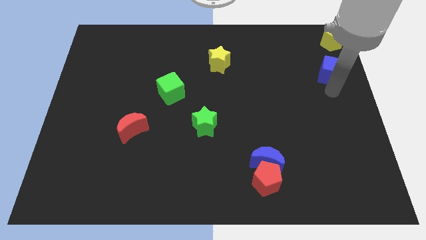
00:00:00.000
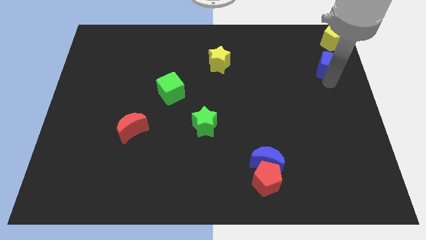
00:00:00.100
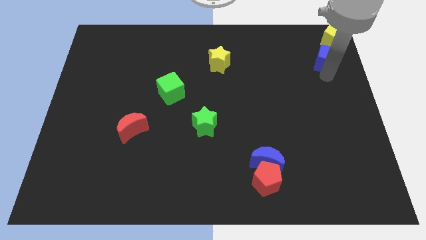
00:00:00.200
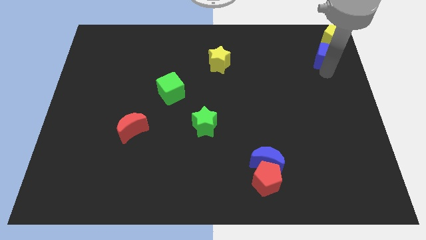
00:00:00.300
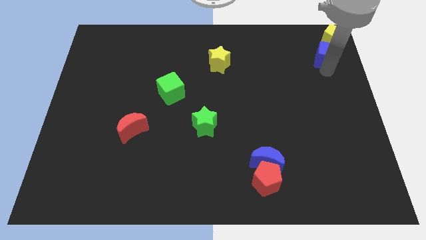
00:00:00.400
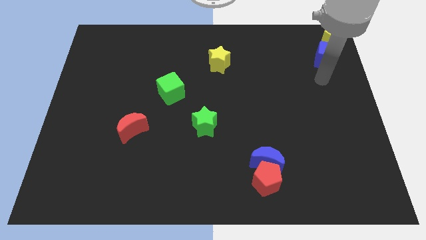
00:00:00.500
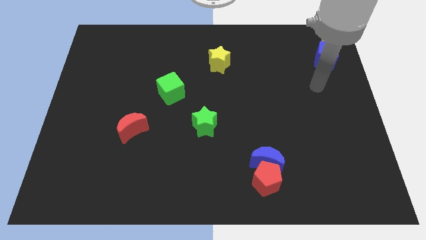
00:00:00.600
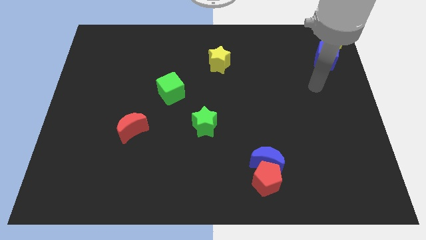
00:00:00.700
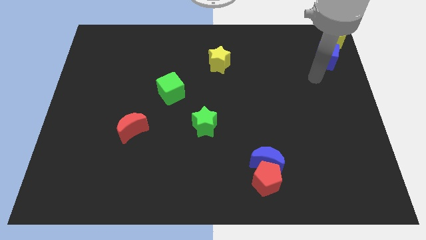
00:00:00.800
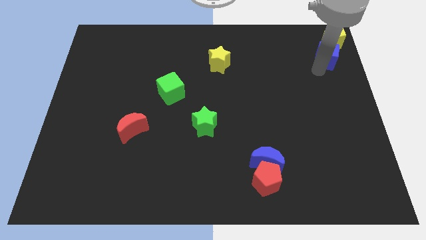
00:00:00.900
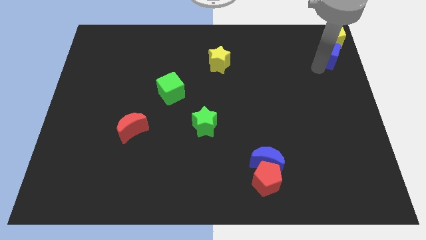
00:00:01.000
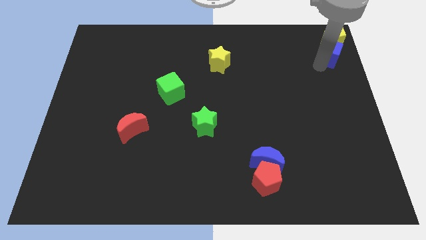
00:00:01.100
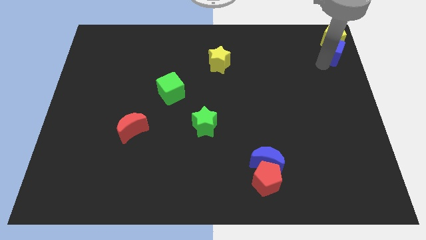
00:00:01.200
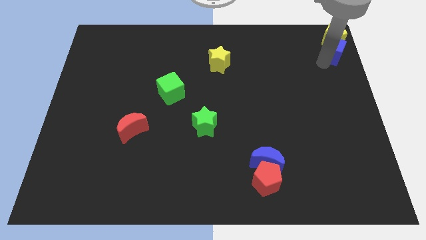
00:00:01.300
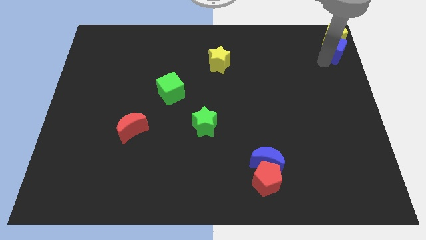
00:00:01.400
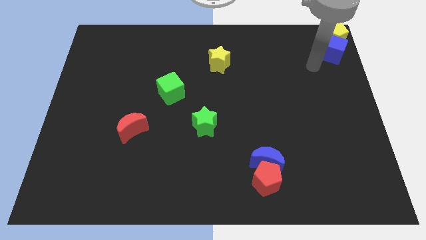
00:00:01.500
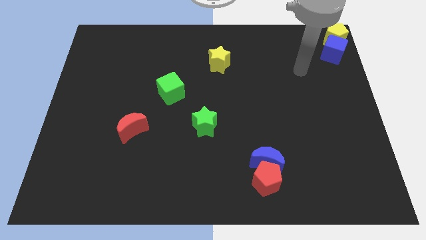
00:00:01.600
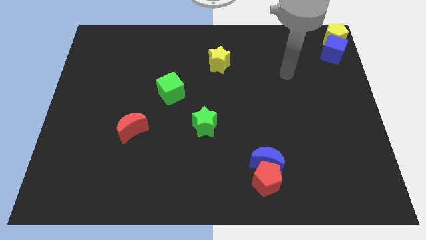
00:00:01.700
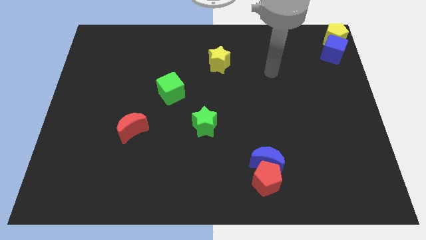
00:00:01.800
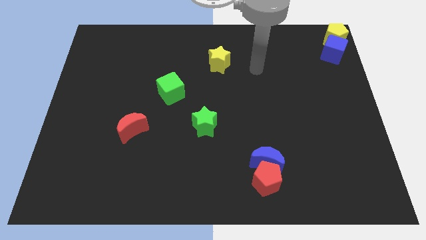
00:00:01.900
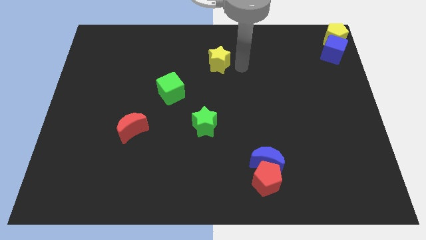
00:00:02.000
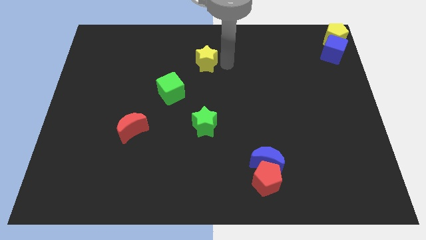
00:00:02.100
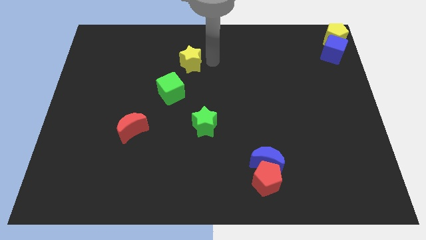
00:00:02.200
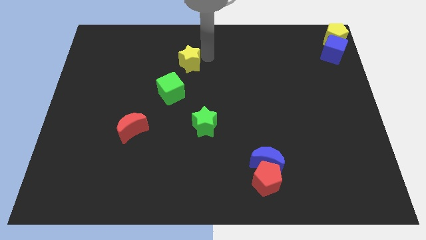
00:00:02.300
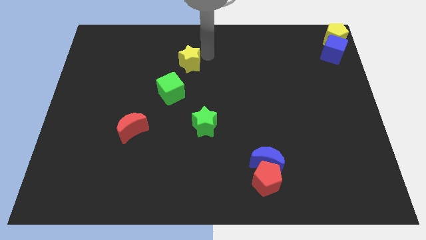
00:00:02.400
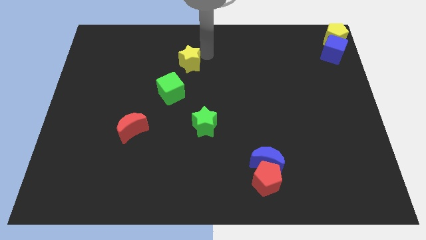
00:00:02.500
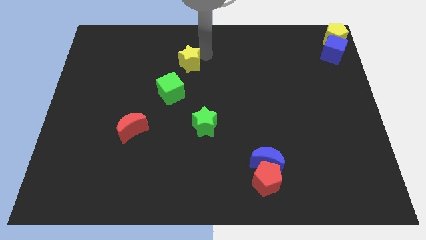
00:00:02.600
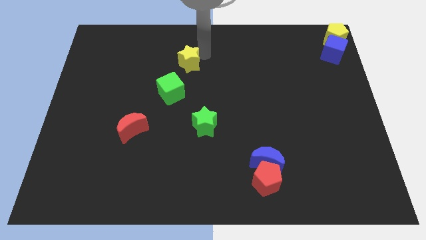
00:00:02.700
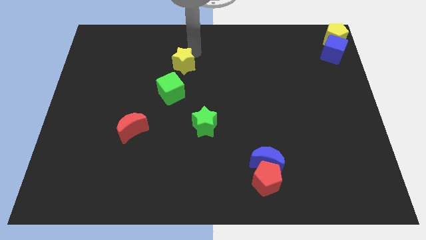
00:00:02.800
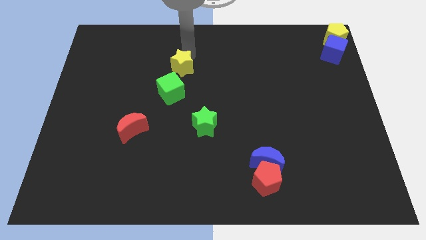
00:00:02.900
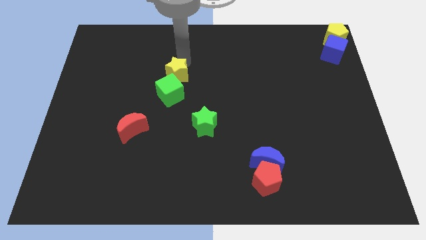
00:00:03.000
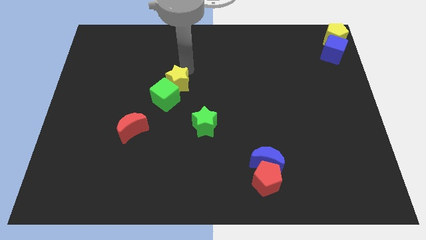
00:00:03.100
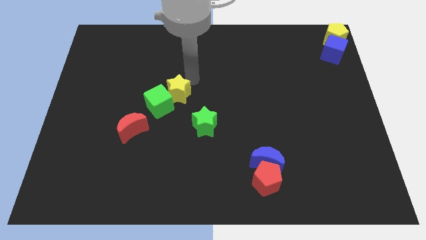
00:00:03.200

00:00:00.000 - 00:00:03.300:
push the yellow star into the green cube

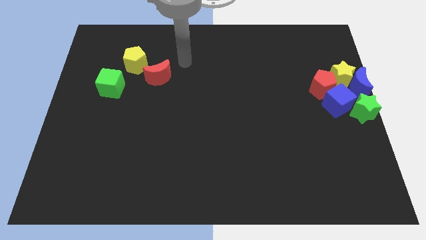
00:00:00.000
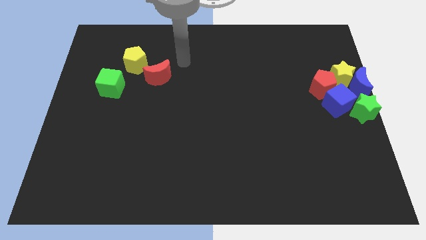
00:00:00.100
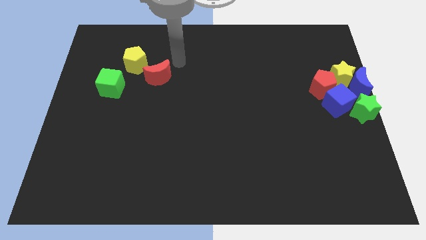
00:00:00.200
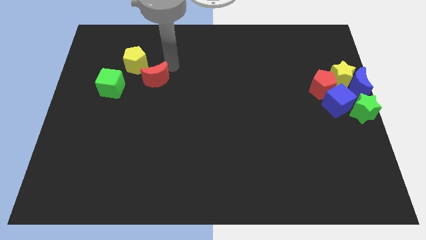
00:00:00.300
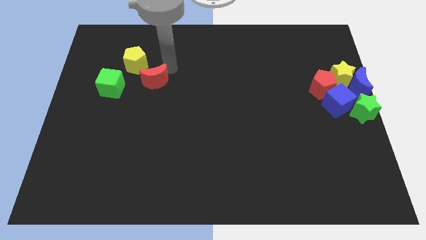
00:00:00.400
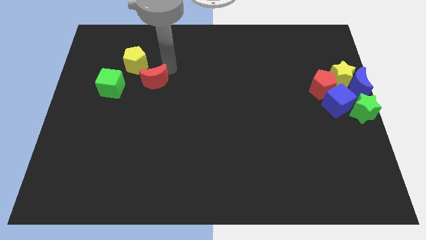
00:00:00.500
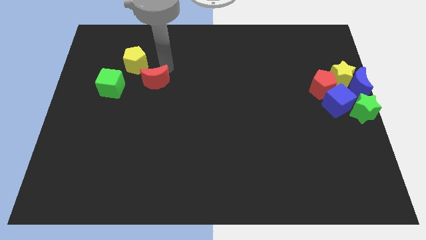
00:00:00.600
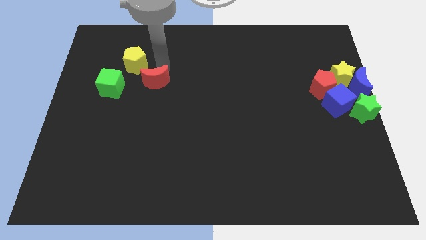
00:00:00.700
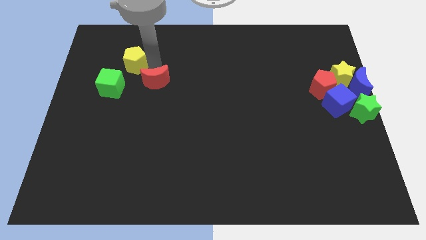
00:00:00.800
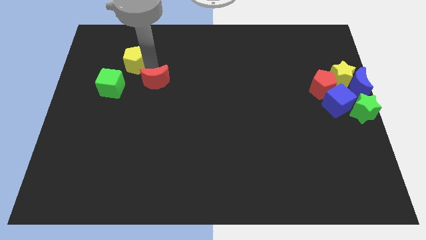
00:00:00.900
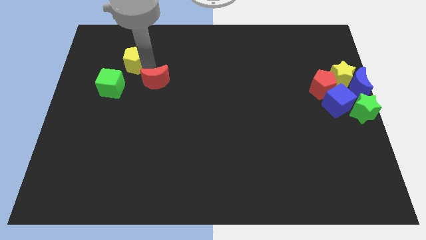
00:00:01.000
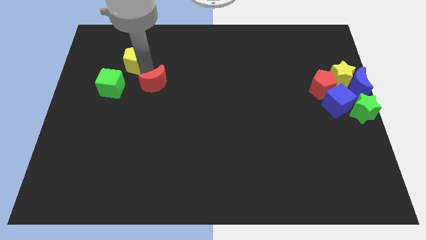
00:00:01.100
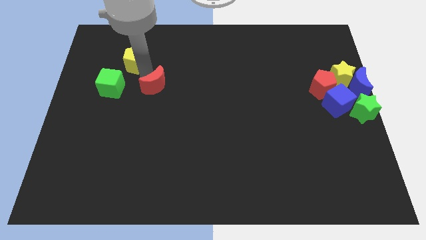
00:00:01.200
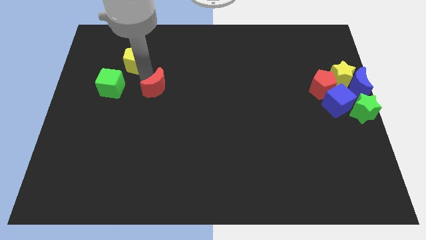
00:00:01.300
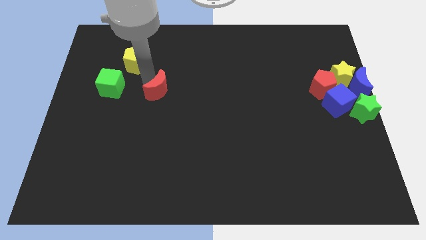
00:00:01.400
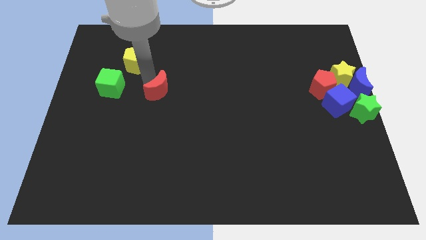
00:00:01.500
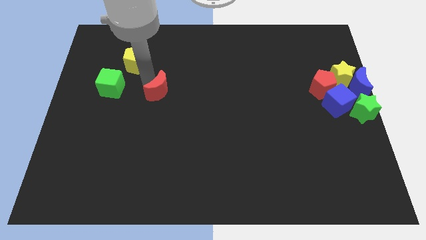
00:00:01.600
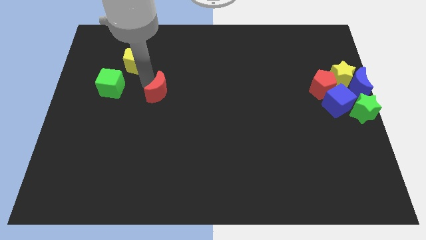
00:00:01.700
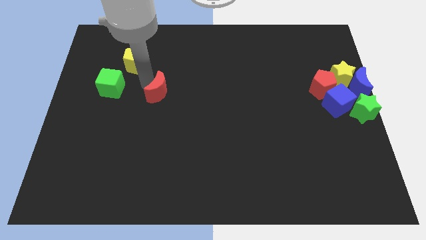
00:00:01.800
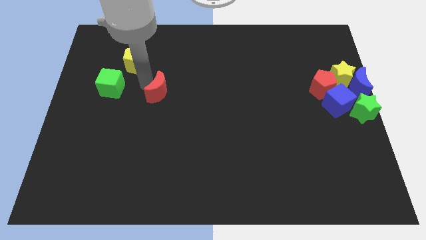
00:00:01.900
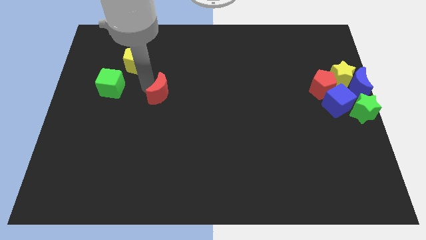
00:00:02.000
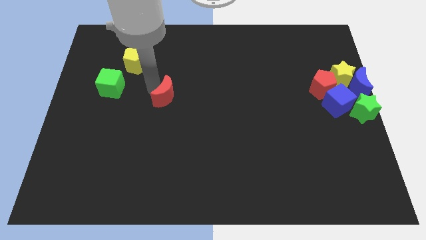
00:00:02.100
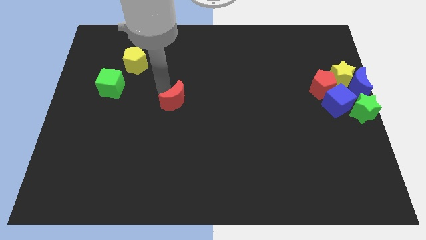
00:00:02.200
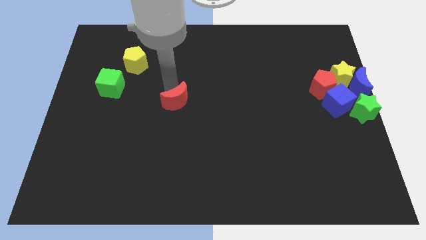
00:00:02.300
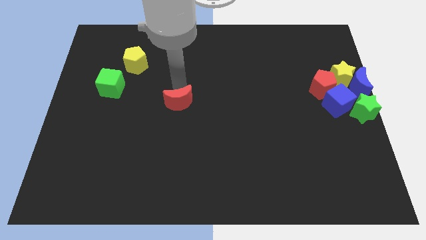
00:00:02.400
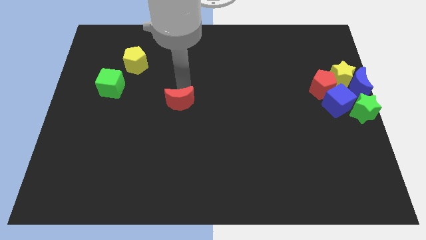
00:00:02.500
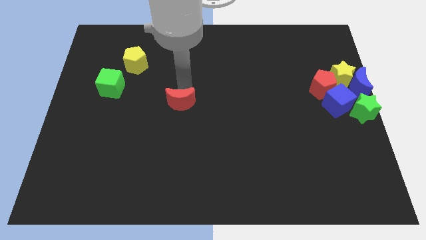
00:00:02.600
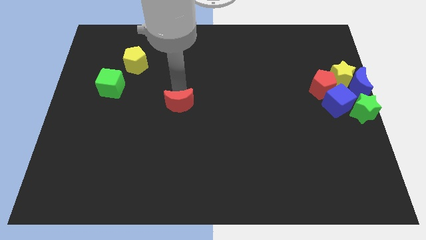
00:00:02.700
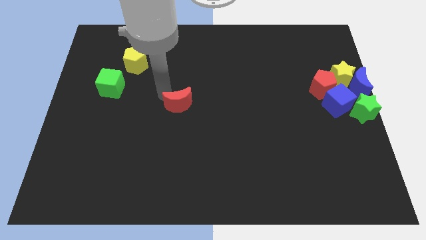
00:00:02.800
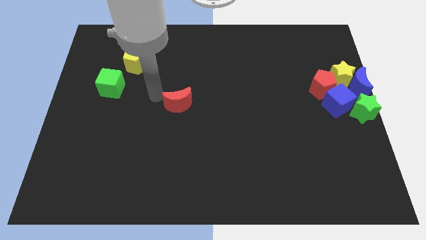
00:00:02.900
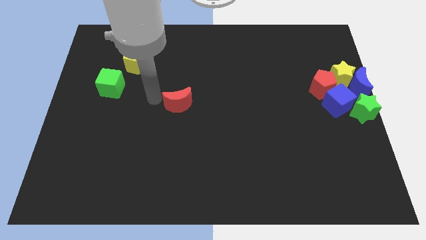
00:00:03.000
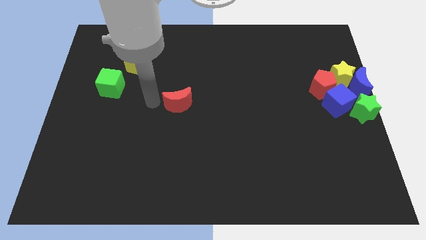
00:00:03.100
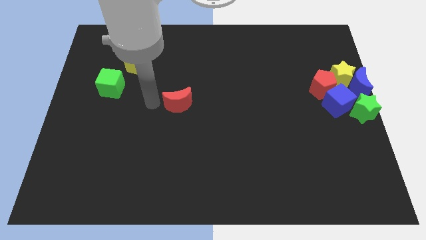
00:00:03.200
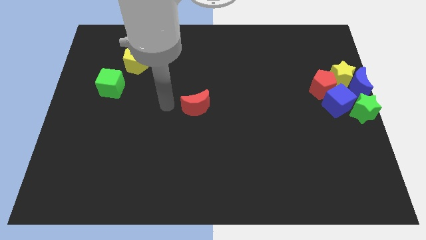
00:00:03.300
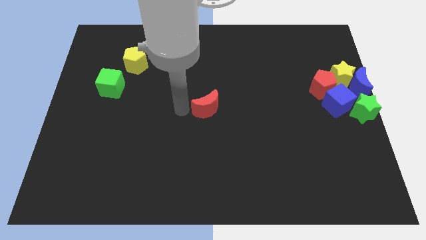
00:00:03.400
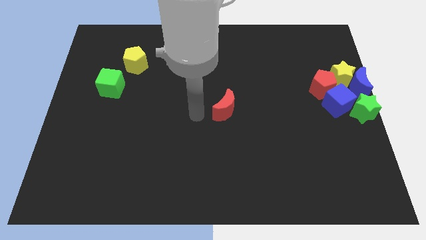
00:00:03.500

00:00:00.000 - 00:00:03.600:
slide the red pentagon to the center of the board

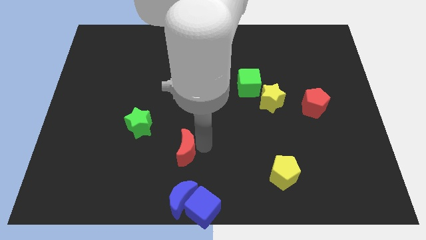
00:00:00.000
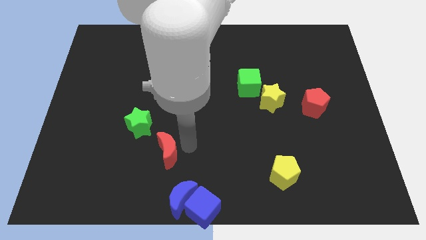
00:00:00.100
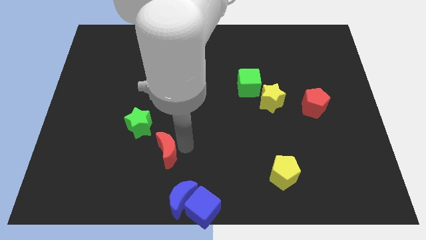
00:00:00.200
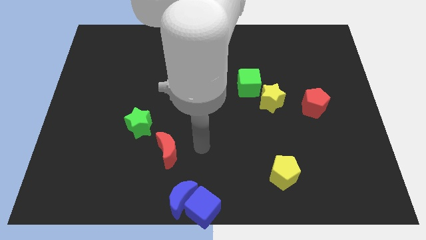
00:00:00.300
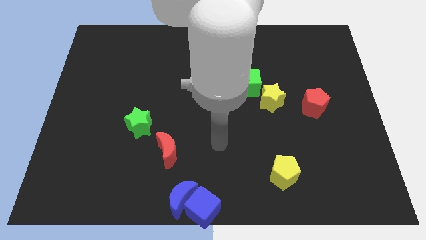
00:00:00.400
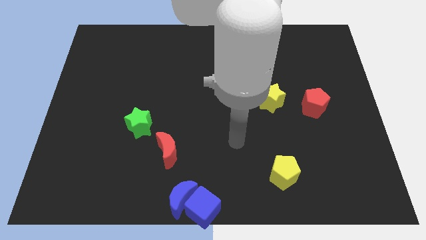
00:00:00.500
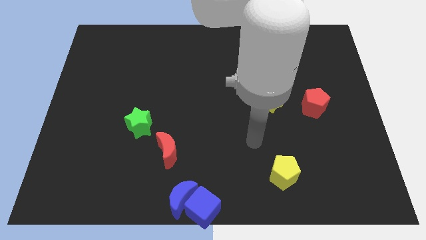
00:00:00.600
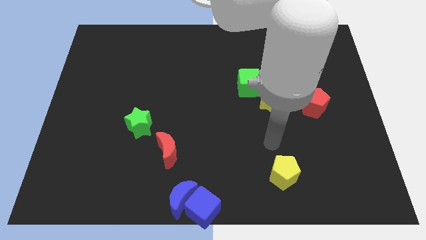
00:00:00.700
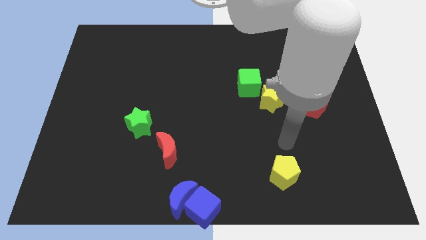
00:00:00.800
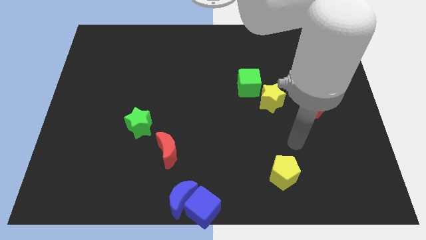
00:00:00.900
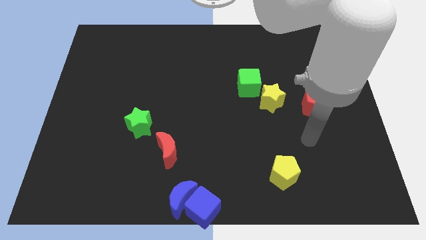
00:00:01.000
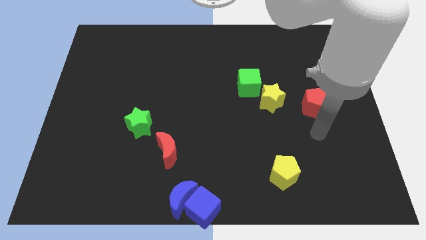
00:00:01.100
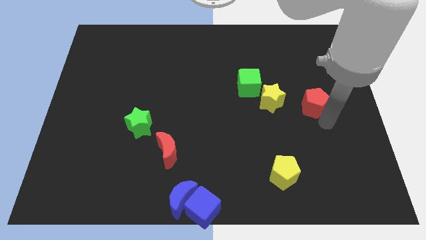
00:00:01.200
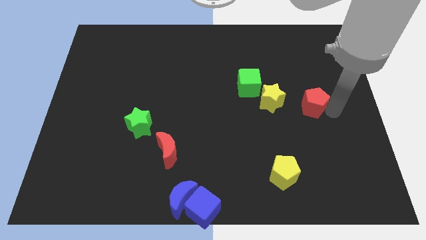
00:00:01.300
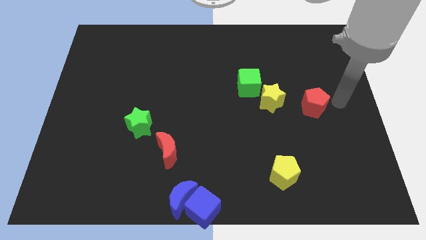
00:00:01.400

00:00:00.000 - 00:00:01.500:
place the red crescent towards the right side of the green star

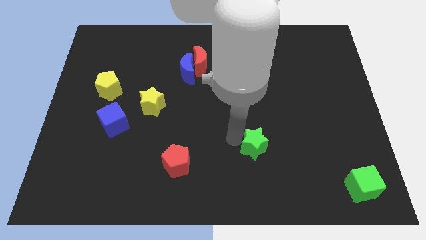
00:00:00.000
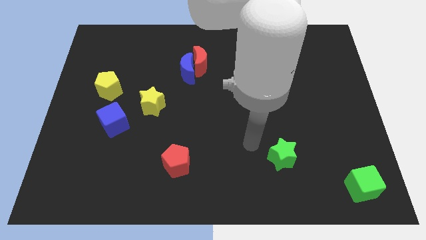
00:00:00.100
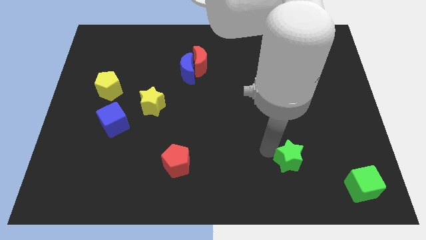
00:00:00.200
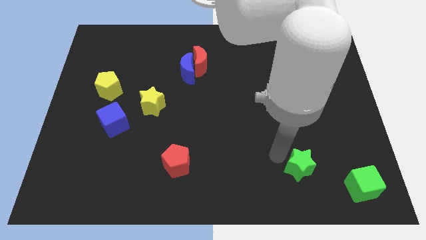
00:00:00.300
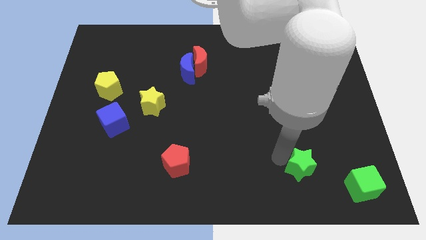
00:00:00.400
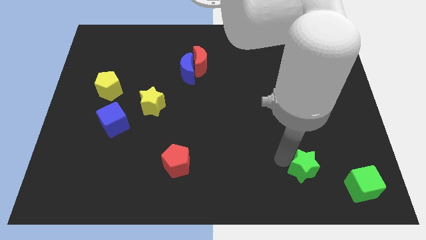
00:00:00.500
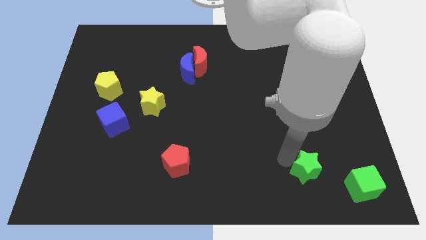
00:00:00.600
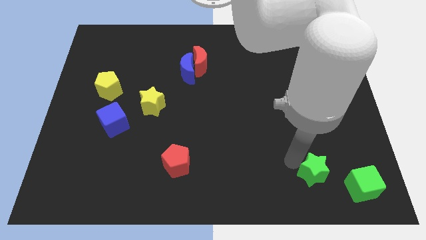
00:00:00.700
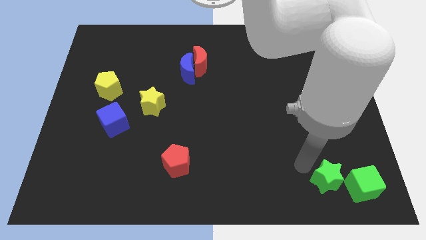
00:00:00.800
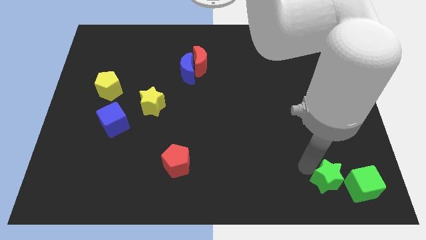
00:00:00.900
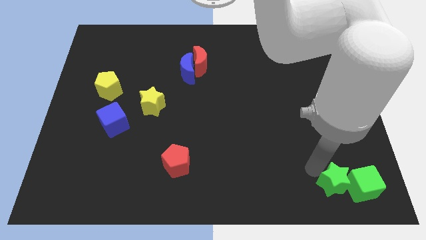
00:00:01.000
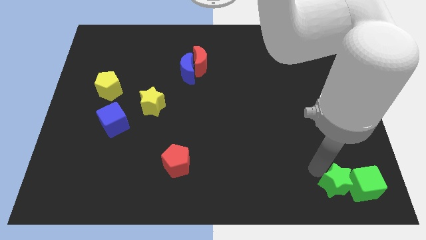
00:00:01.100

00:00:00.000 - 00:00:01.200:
move the green star to the right of the green cube
